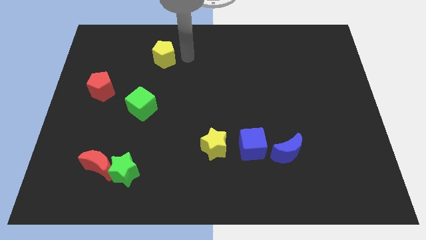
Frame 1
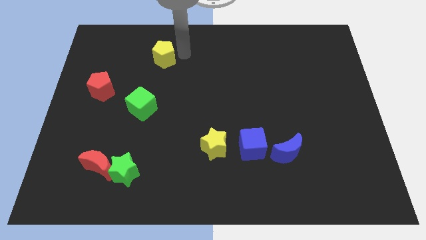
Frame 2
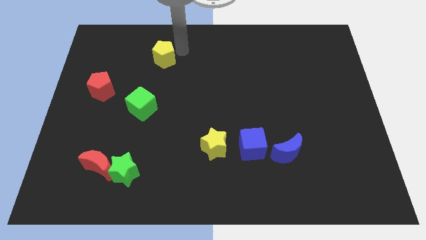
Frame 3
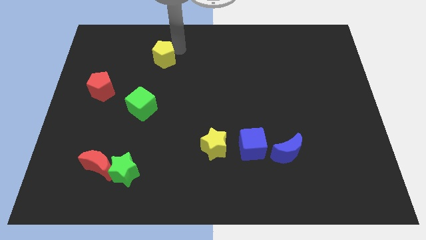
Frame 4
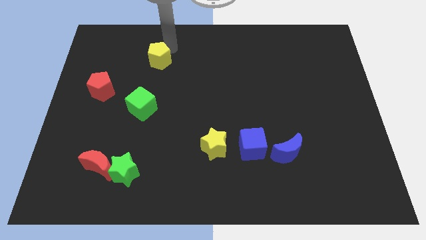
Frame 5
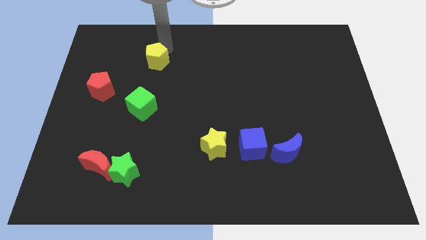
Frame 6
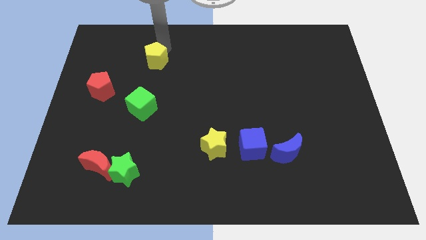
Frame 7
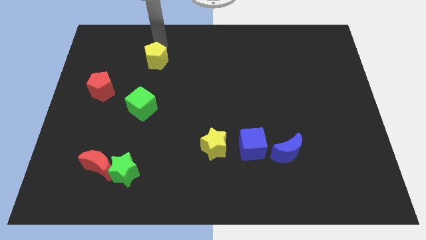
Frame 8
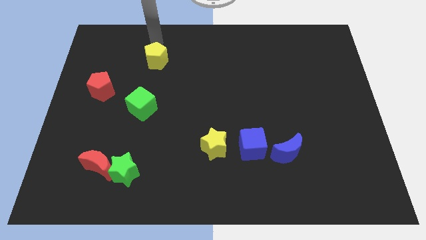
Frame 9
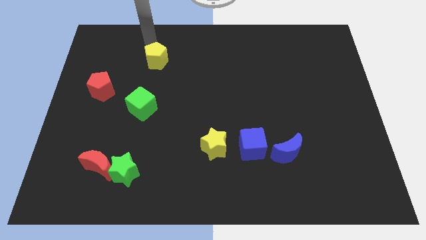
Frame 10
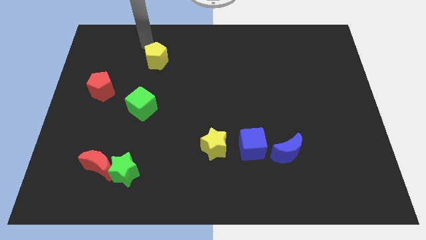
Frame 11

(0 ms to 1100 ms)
move the yellow pentagon slightly to the left

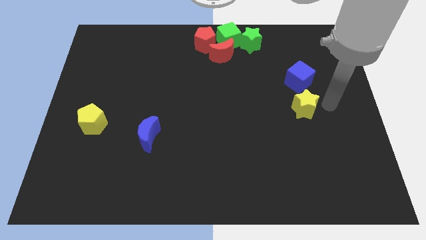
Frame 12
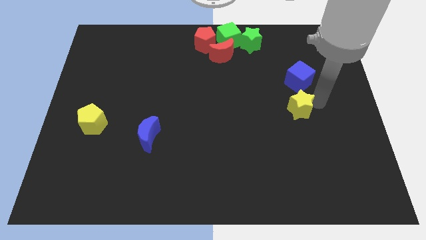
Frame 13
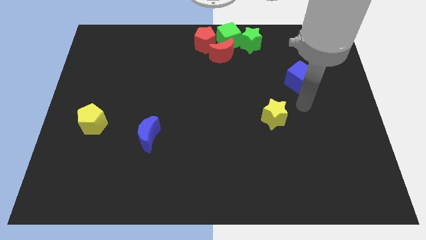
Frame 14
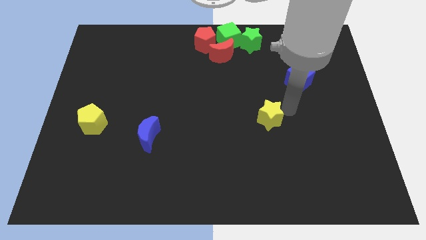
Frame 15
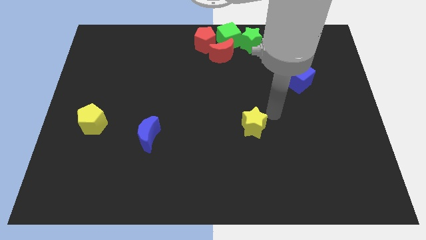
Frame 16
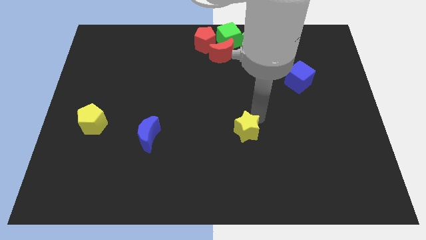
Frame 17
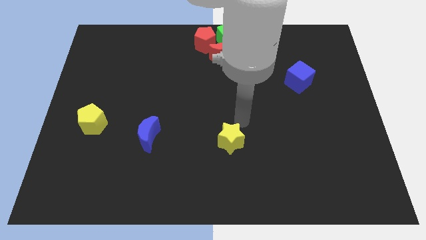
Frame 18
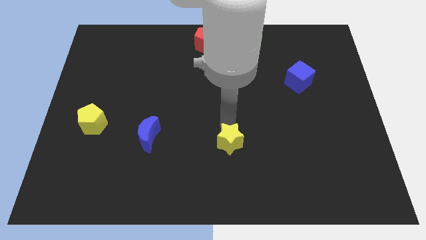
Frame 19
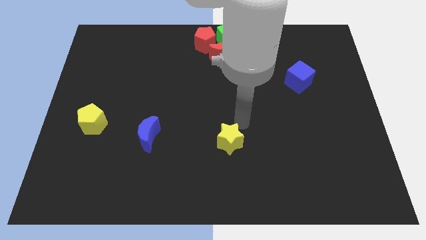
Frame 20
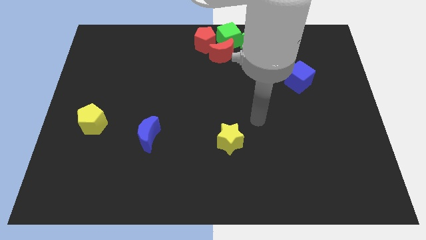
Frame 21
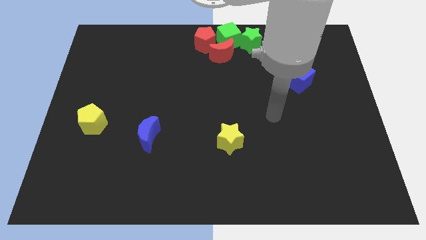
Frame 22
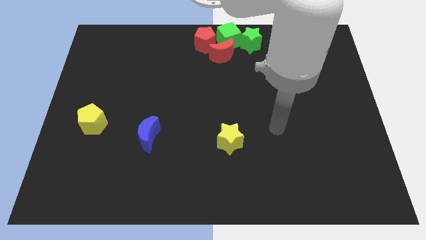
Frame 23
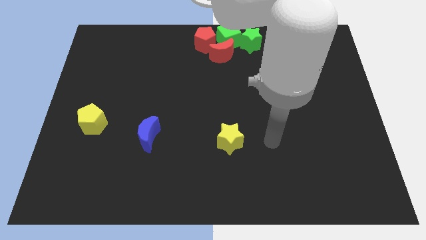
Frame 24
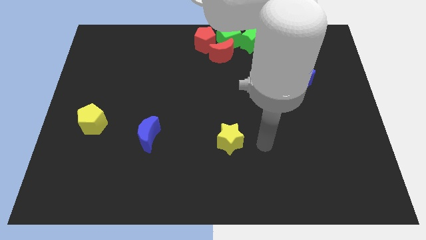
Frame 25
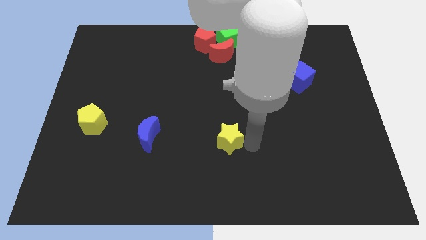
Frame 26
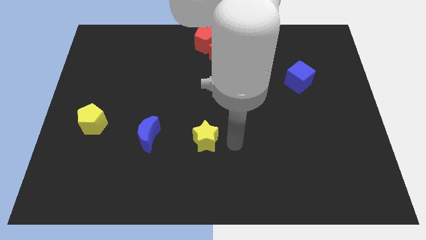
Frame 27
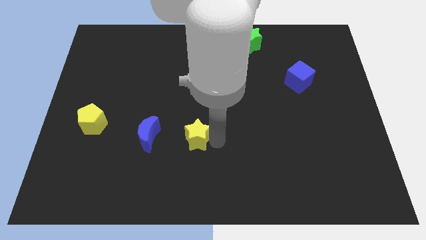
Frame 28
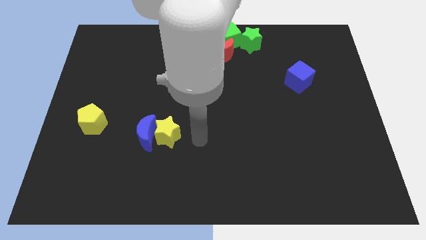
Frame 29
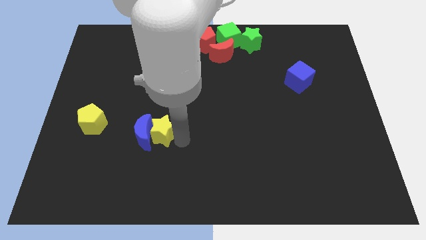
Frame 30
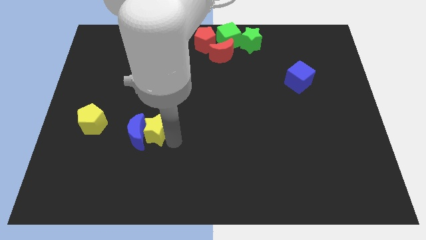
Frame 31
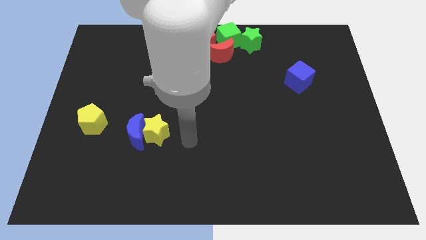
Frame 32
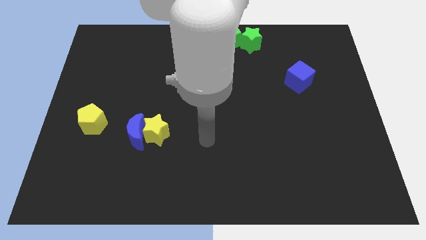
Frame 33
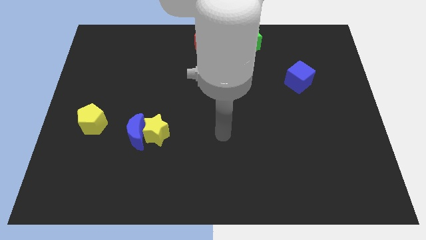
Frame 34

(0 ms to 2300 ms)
place the yellow star towards the right side of the blue moon

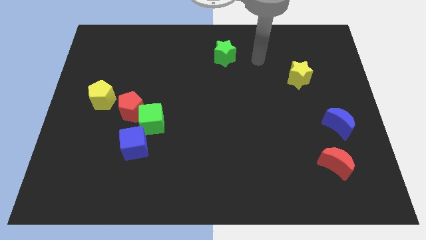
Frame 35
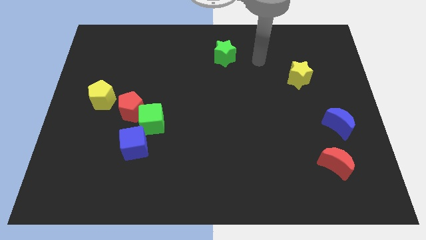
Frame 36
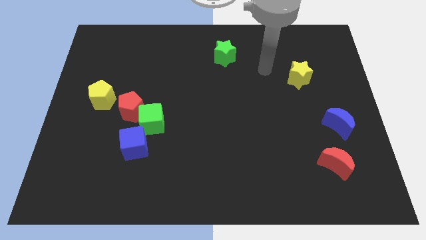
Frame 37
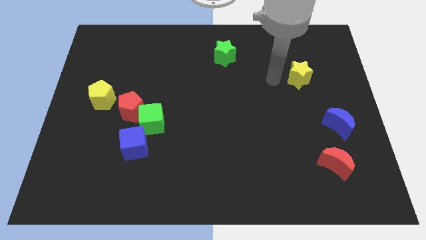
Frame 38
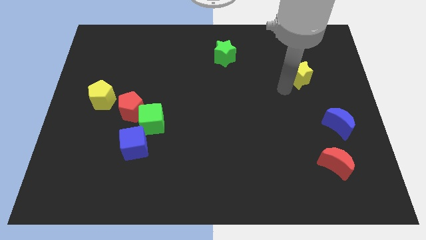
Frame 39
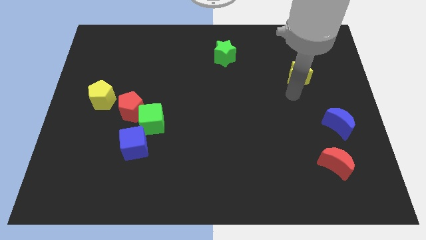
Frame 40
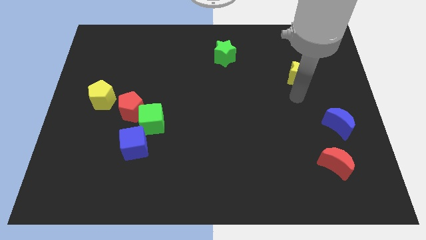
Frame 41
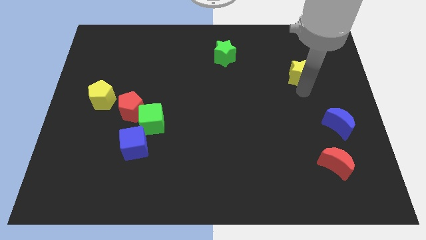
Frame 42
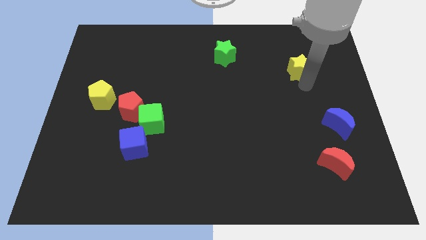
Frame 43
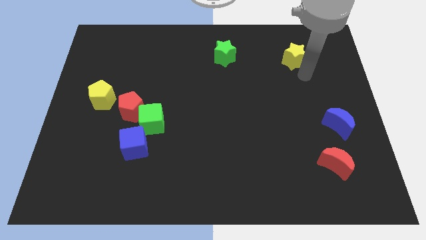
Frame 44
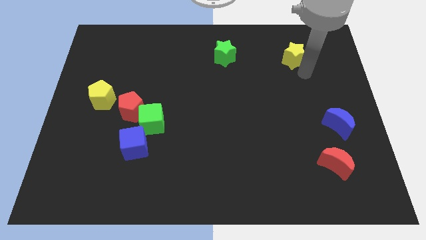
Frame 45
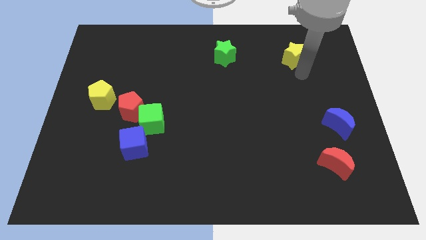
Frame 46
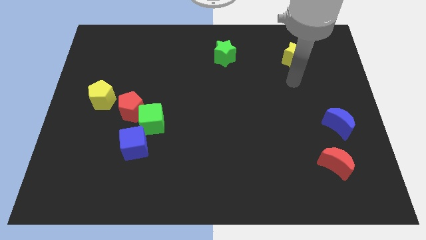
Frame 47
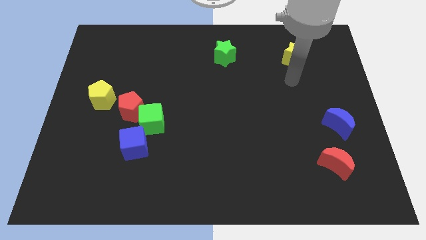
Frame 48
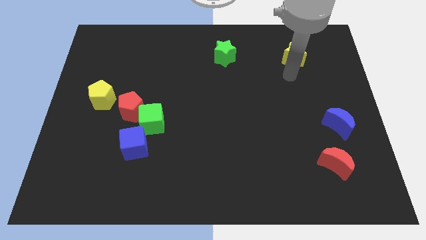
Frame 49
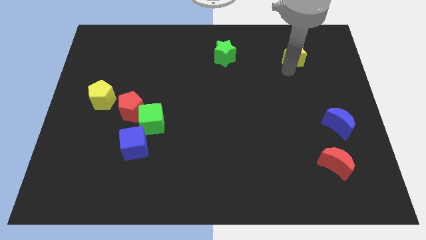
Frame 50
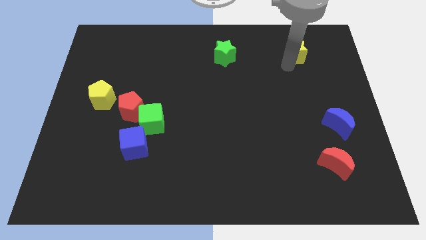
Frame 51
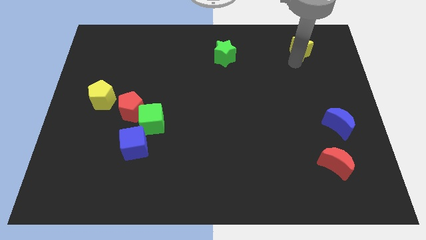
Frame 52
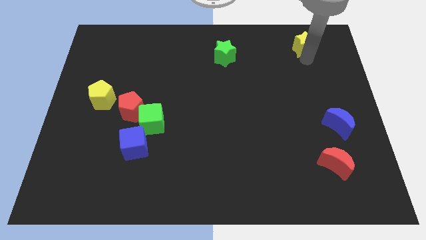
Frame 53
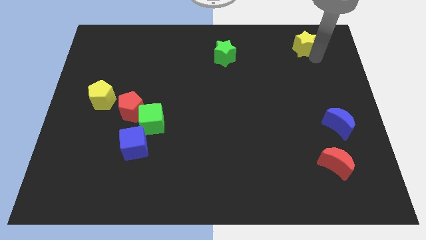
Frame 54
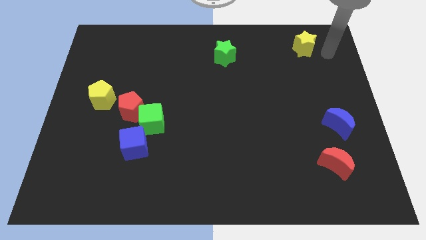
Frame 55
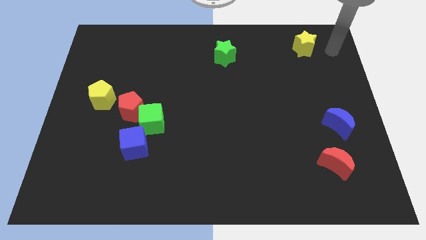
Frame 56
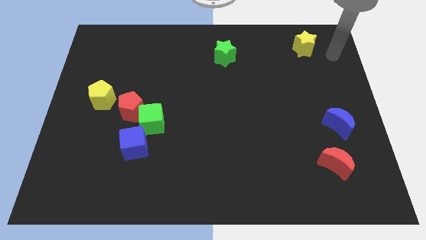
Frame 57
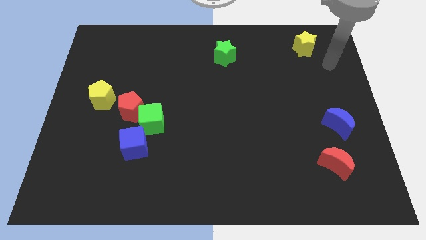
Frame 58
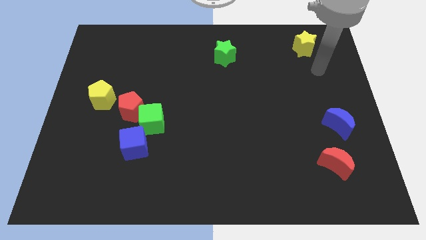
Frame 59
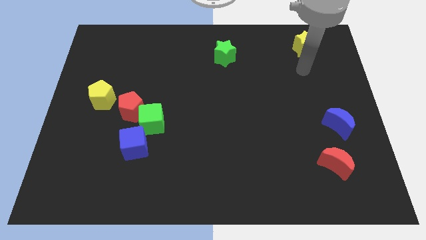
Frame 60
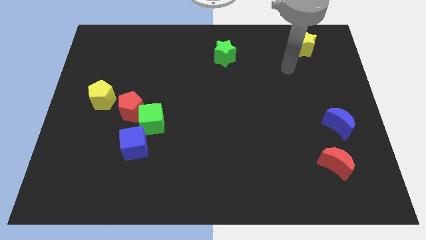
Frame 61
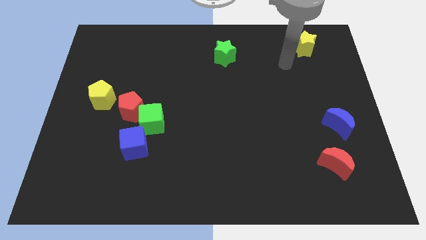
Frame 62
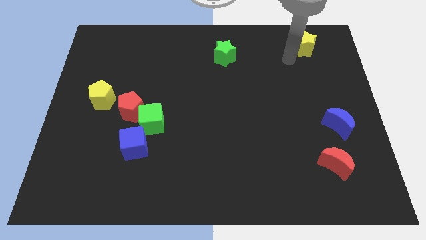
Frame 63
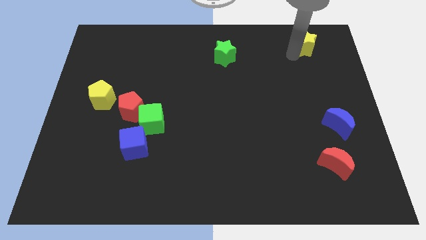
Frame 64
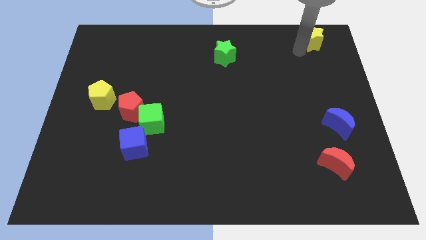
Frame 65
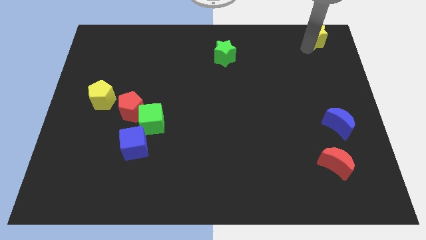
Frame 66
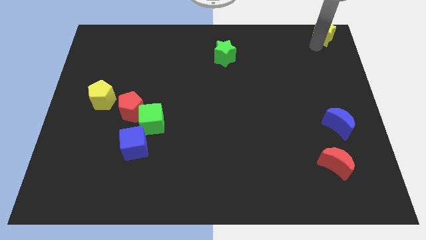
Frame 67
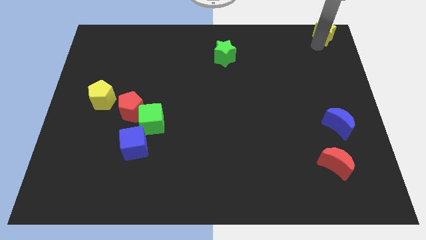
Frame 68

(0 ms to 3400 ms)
push the yellow star to the top right of the table

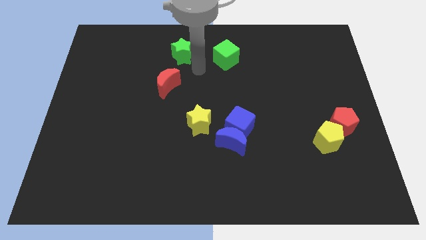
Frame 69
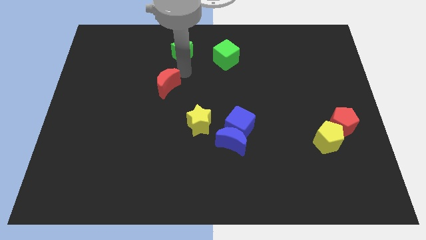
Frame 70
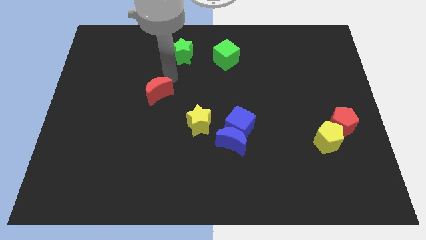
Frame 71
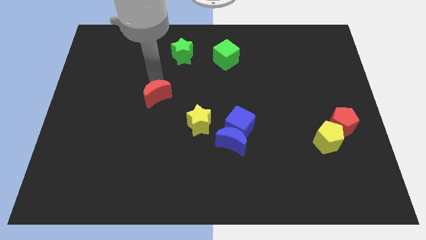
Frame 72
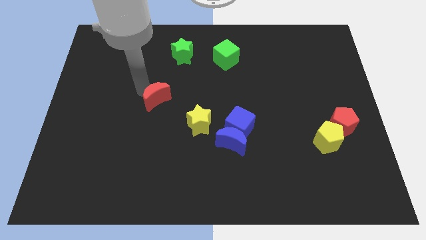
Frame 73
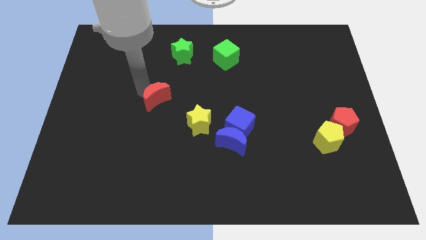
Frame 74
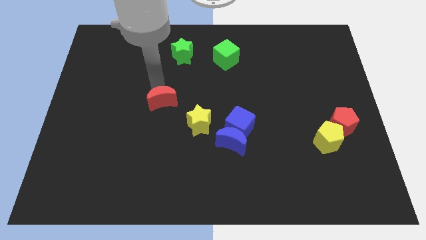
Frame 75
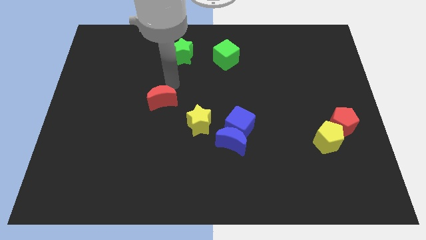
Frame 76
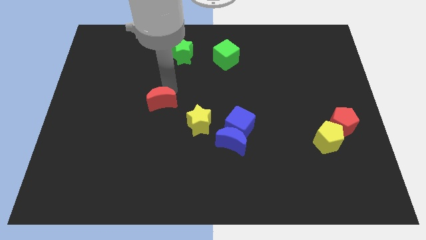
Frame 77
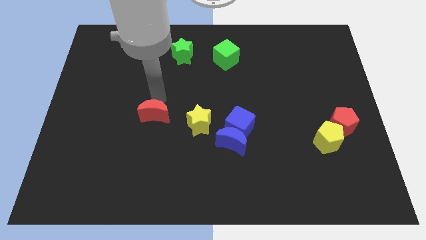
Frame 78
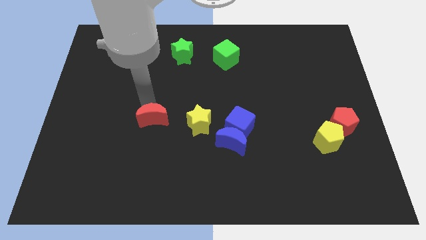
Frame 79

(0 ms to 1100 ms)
move the red crescent to the left of the yellow star

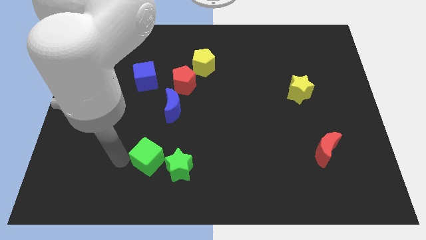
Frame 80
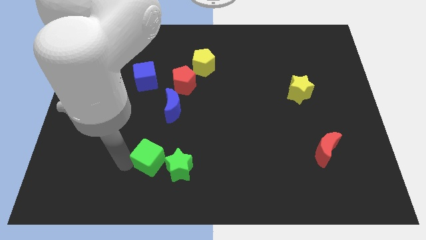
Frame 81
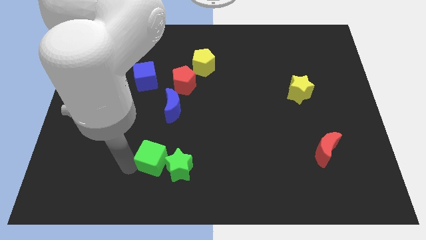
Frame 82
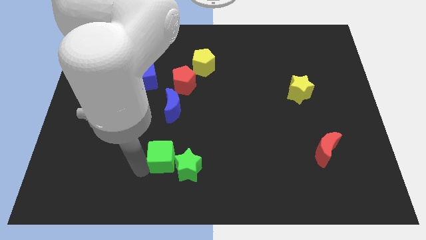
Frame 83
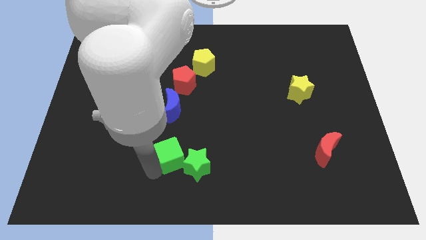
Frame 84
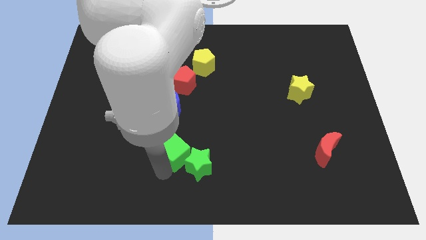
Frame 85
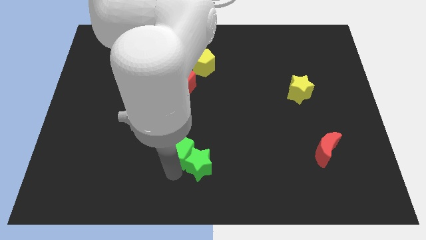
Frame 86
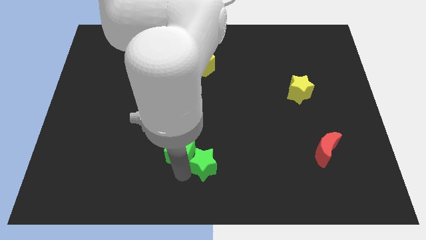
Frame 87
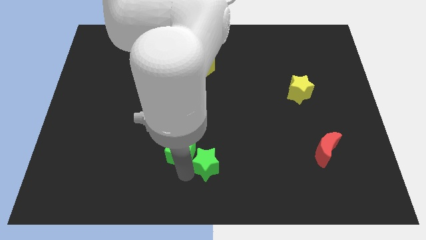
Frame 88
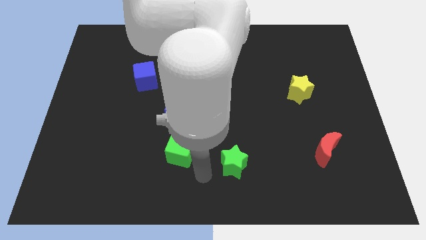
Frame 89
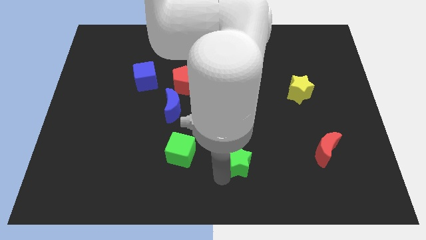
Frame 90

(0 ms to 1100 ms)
separate the green star and green cube
